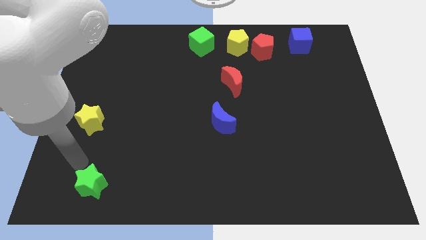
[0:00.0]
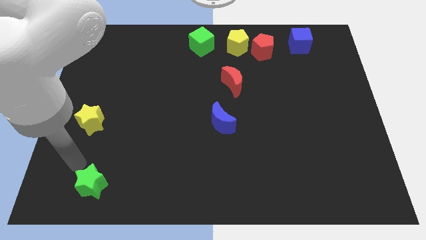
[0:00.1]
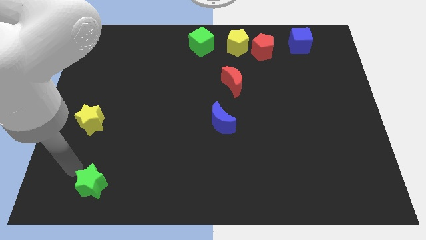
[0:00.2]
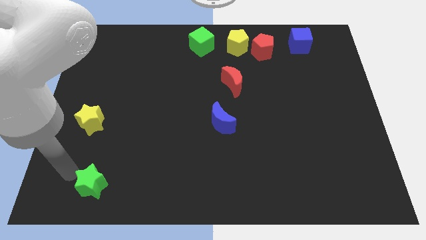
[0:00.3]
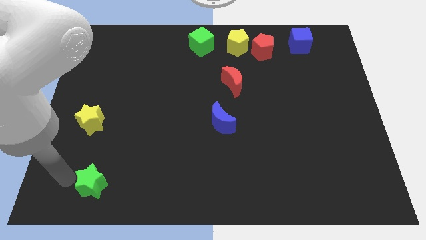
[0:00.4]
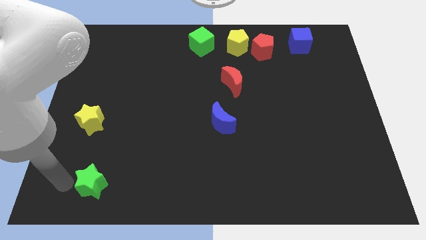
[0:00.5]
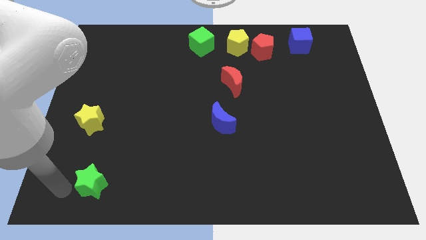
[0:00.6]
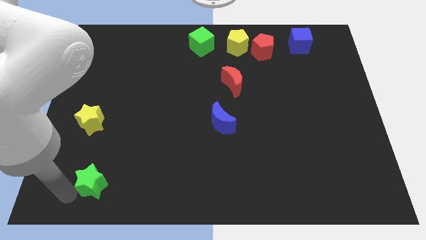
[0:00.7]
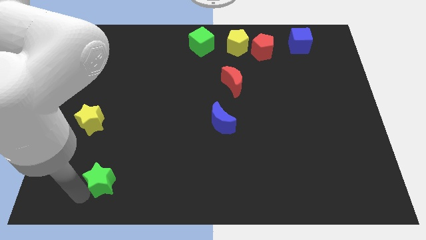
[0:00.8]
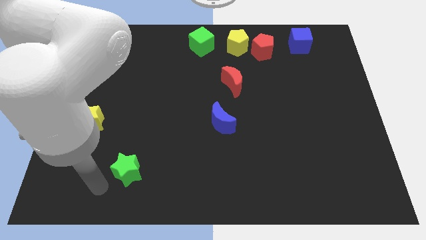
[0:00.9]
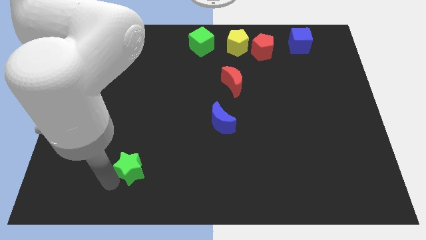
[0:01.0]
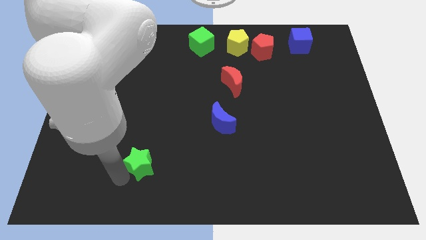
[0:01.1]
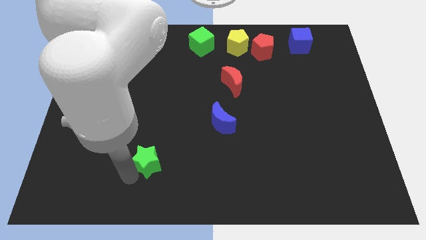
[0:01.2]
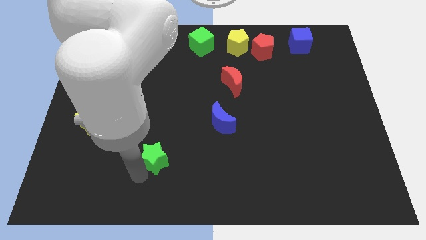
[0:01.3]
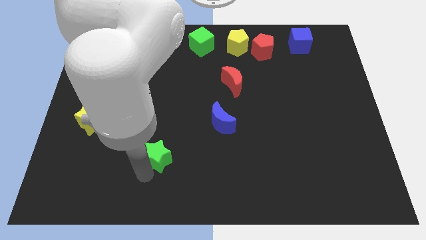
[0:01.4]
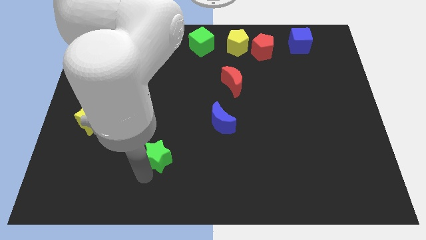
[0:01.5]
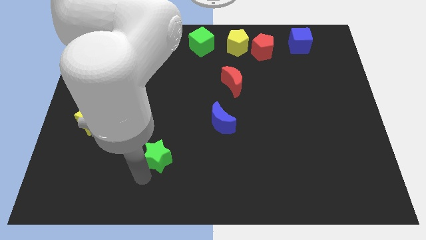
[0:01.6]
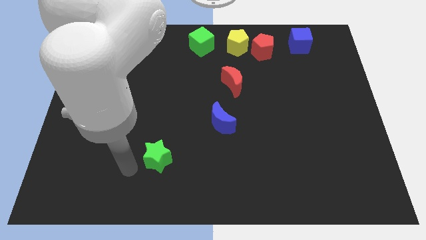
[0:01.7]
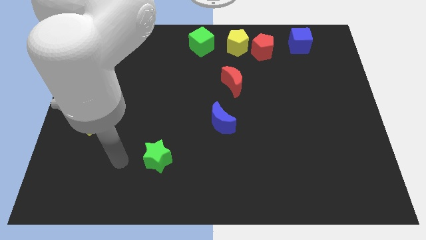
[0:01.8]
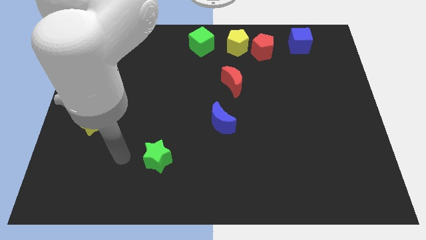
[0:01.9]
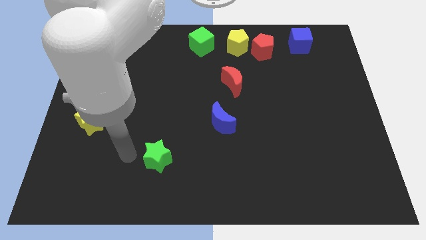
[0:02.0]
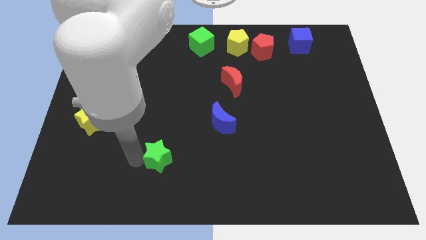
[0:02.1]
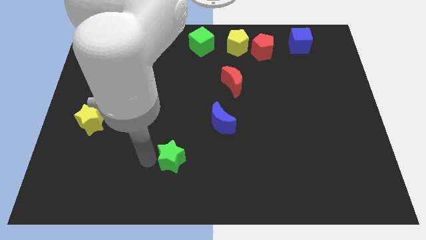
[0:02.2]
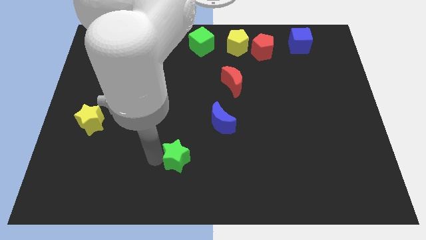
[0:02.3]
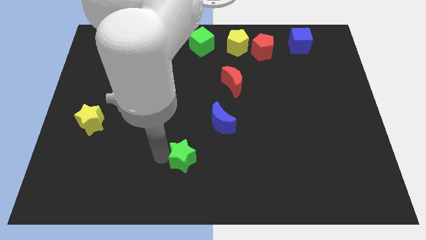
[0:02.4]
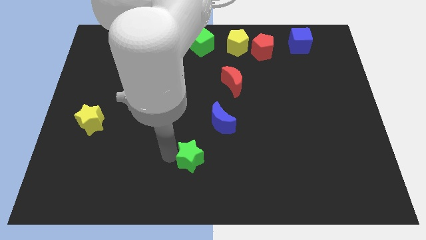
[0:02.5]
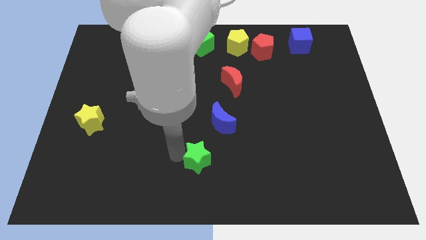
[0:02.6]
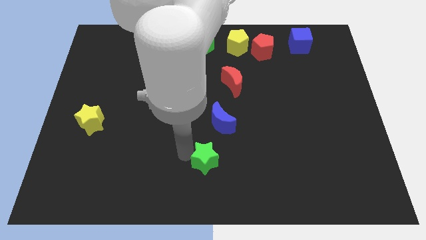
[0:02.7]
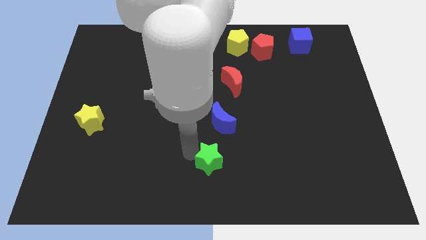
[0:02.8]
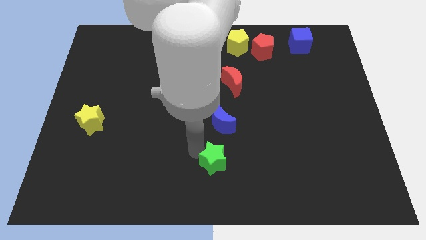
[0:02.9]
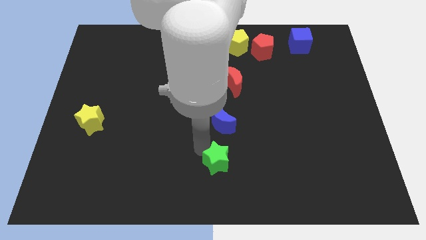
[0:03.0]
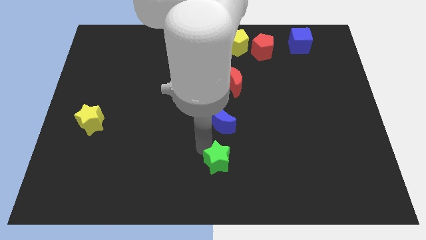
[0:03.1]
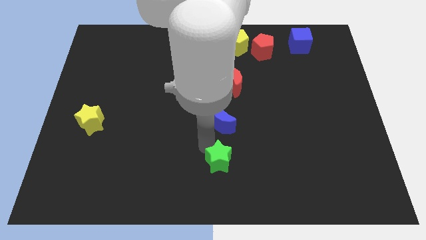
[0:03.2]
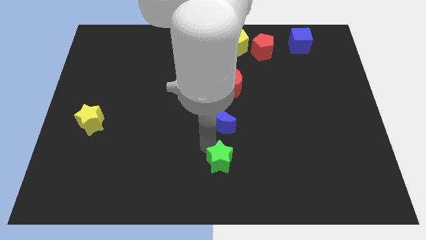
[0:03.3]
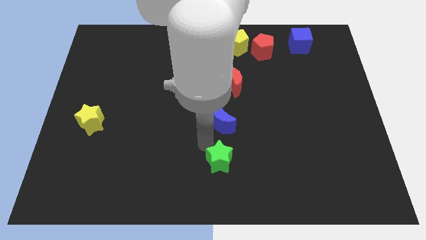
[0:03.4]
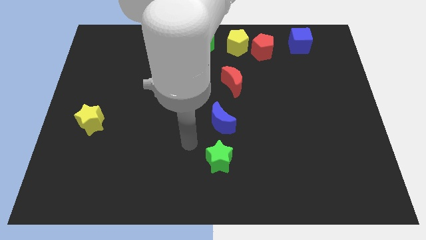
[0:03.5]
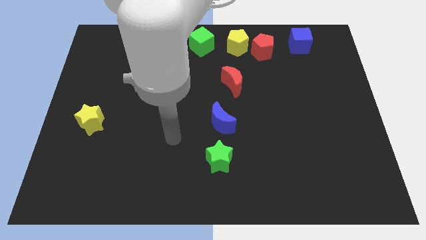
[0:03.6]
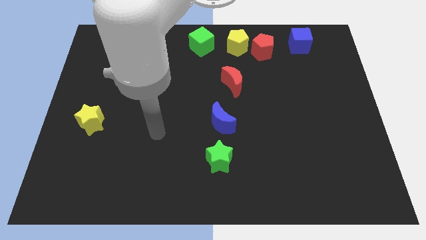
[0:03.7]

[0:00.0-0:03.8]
push the green star to the bottom side of the blue moon

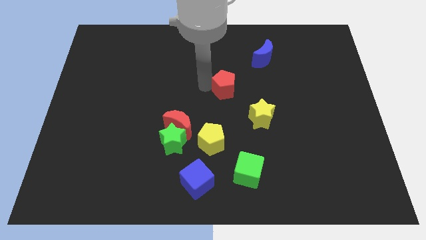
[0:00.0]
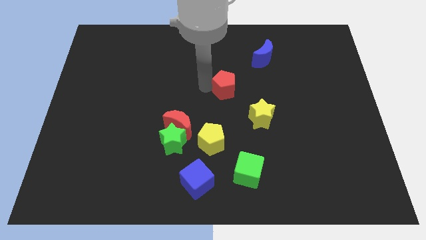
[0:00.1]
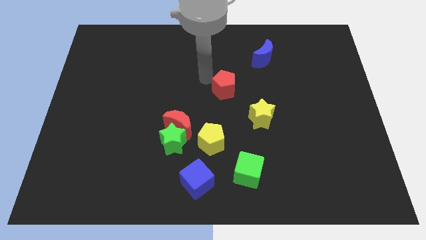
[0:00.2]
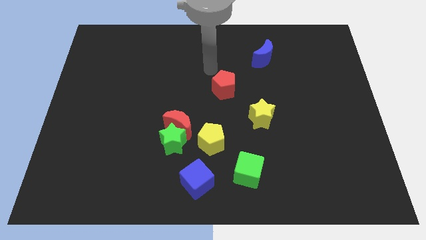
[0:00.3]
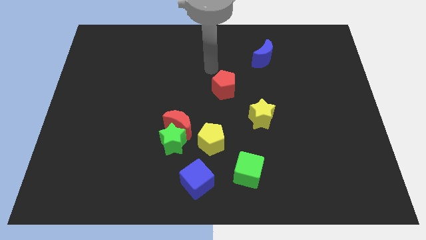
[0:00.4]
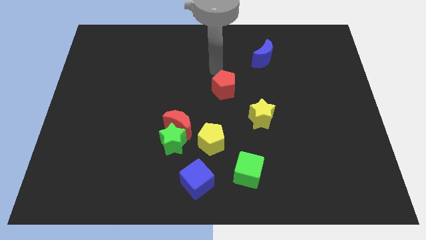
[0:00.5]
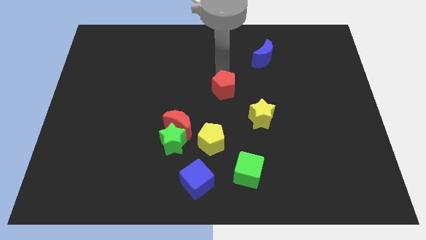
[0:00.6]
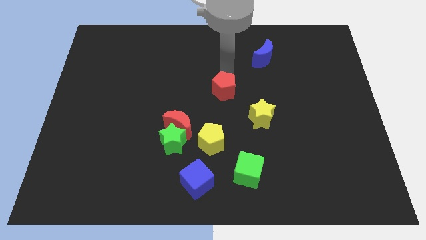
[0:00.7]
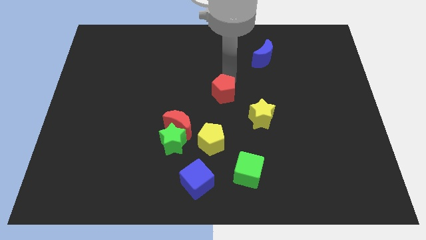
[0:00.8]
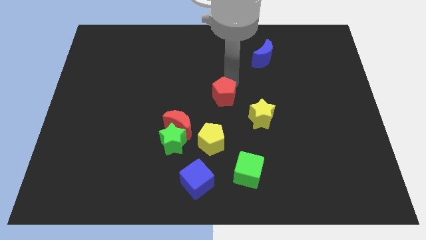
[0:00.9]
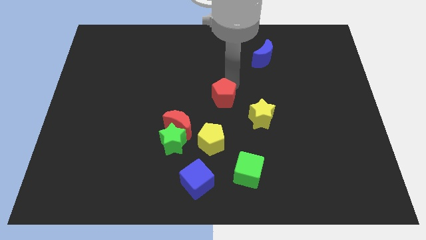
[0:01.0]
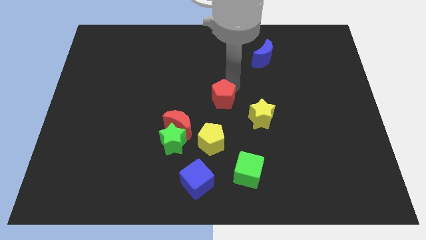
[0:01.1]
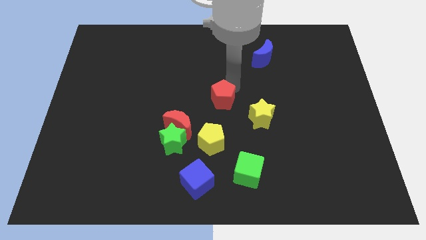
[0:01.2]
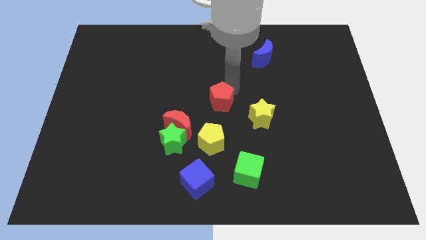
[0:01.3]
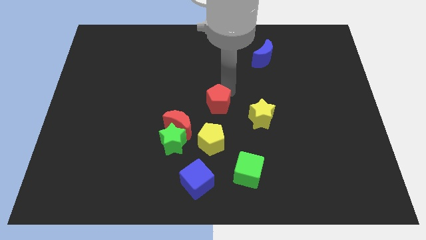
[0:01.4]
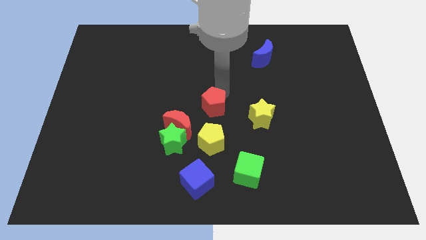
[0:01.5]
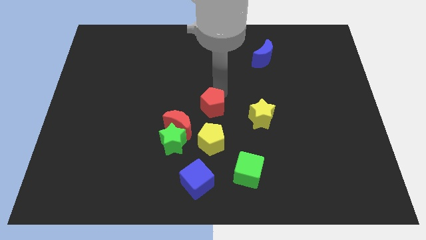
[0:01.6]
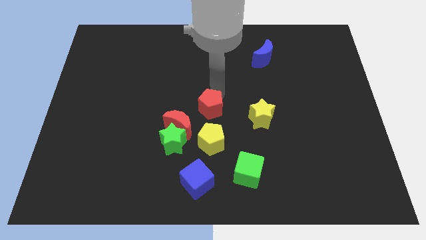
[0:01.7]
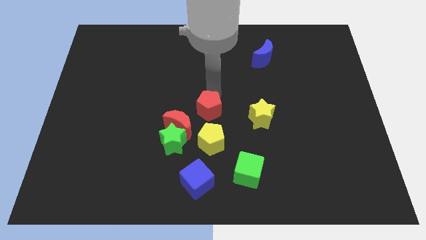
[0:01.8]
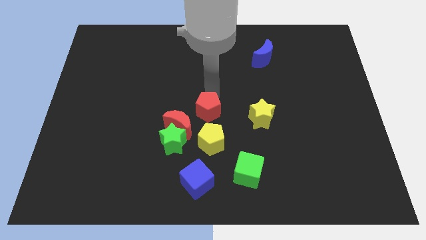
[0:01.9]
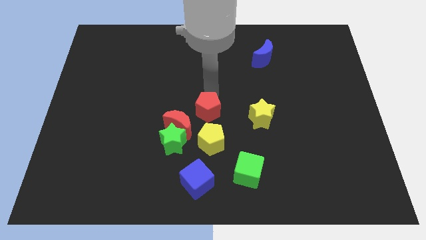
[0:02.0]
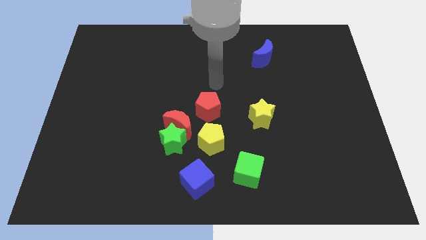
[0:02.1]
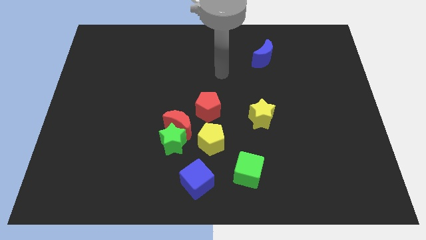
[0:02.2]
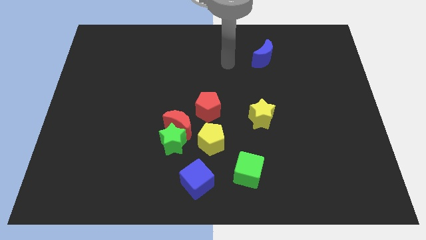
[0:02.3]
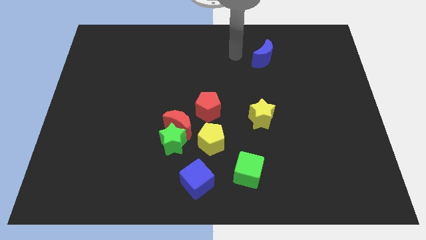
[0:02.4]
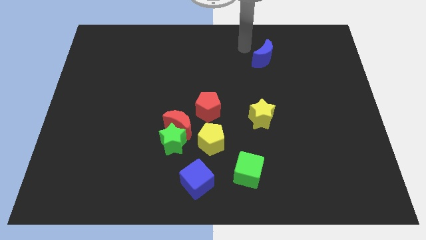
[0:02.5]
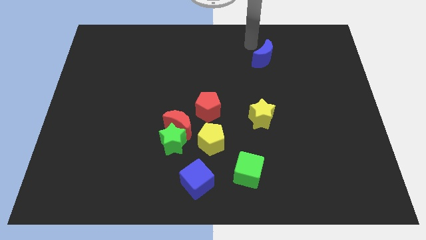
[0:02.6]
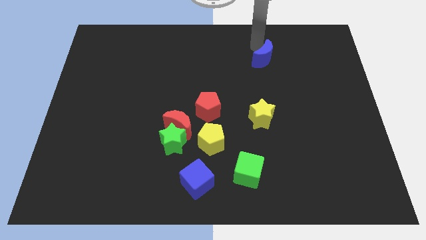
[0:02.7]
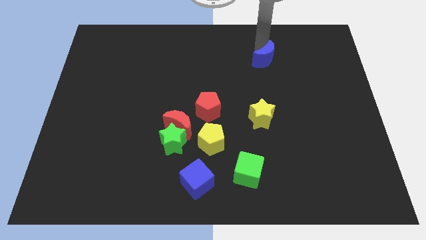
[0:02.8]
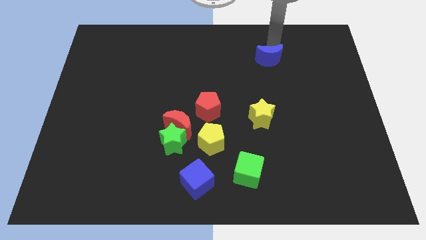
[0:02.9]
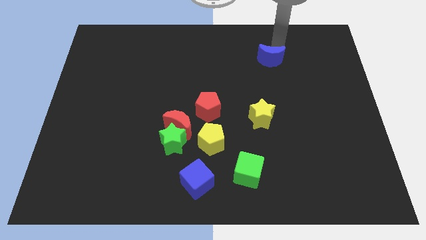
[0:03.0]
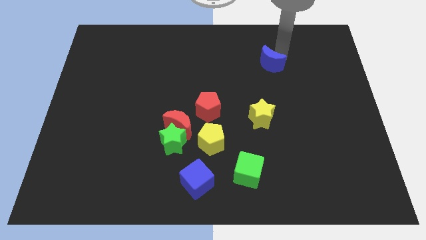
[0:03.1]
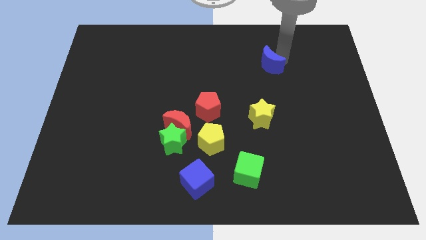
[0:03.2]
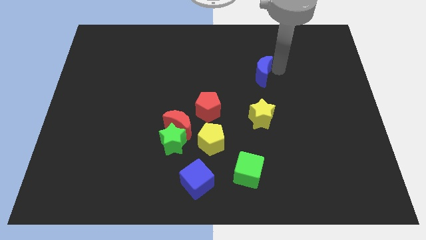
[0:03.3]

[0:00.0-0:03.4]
push blue crescent downwards

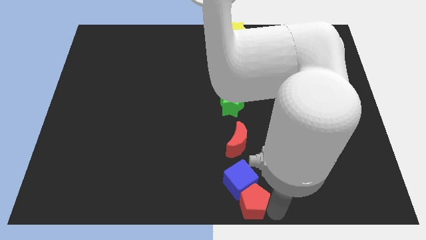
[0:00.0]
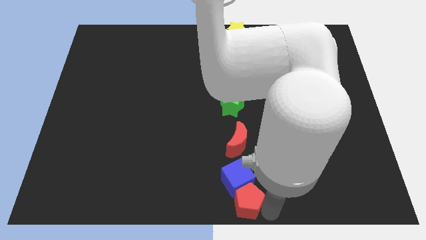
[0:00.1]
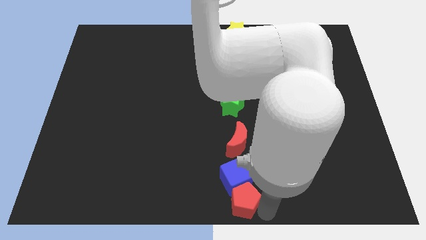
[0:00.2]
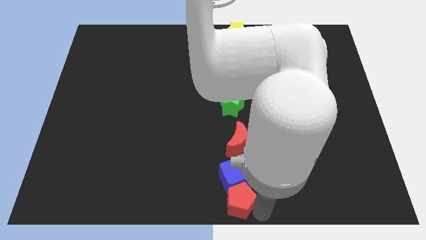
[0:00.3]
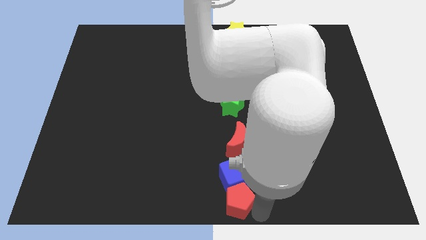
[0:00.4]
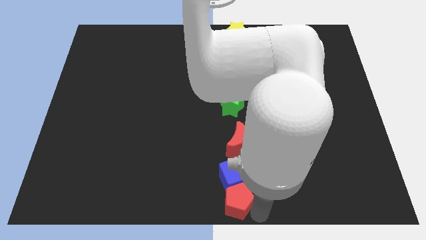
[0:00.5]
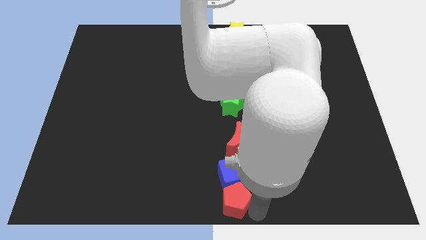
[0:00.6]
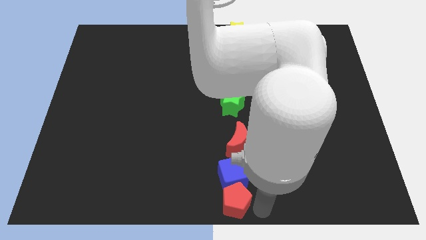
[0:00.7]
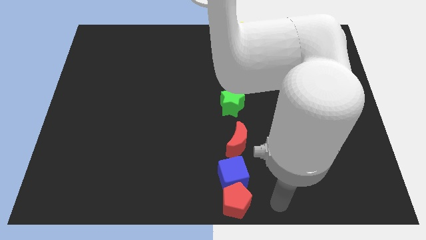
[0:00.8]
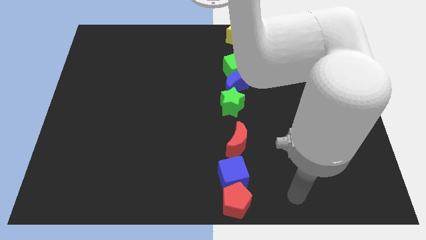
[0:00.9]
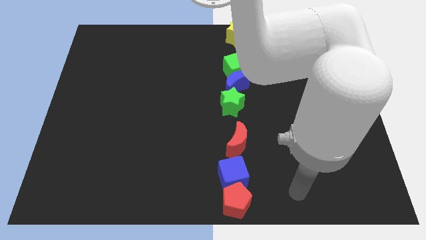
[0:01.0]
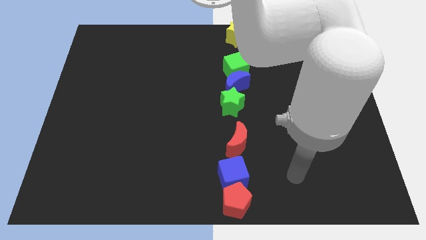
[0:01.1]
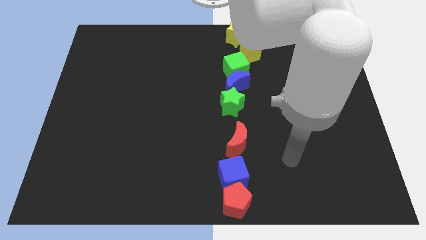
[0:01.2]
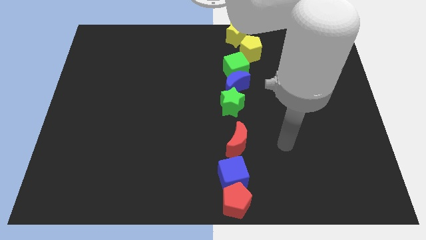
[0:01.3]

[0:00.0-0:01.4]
place the red pentagon below the blue cube

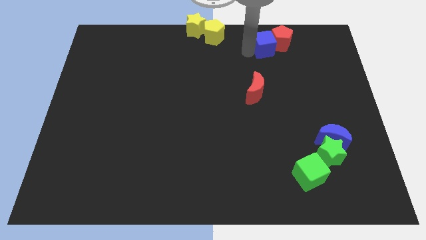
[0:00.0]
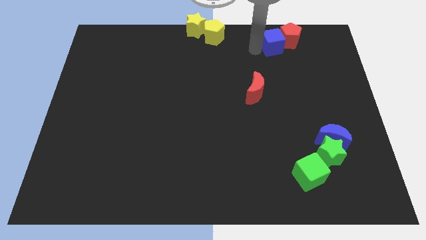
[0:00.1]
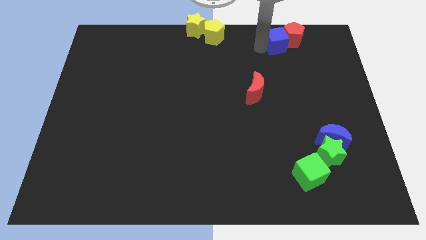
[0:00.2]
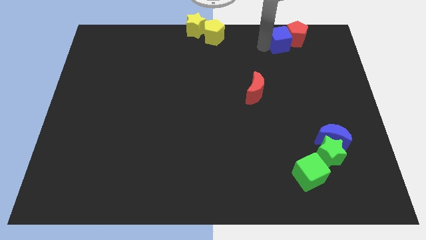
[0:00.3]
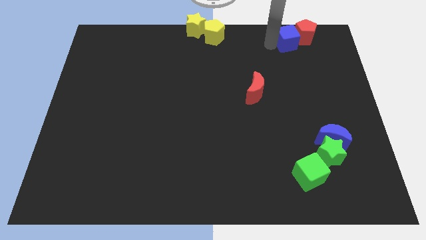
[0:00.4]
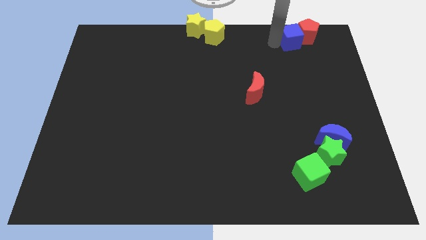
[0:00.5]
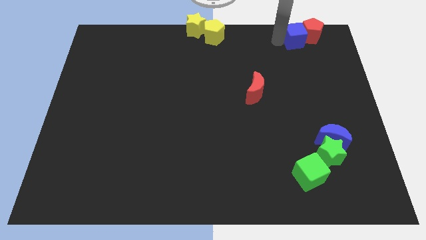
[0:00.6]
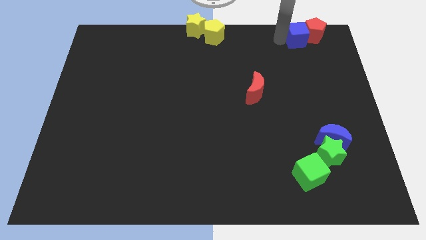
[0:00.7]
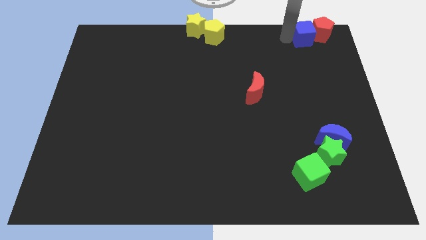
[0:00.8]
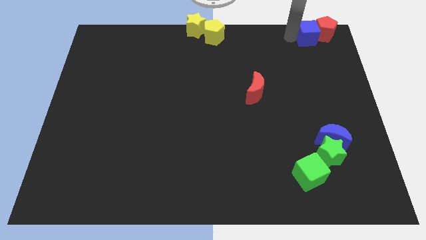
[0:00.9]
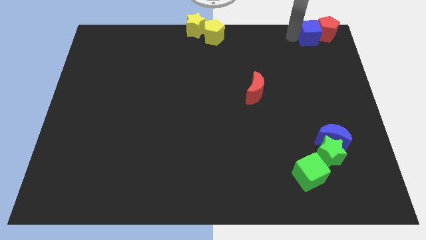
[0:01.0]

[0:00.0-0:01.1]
push the blue cube along with red pentagon towards top right of the board
